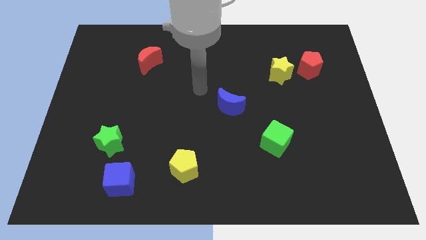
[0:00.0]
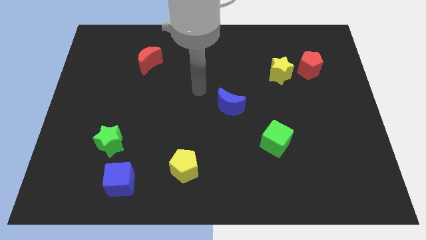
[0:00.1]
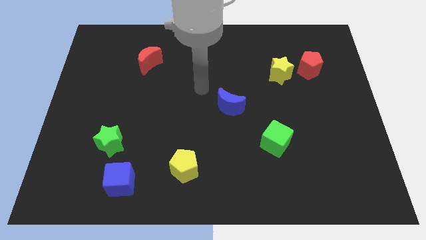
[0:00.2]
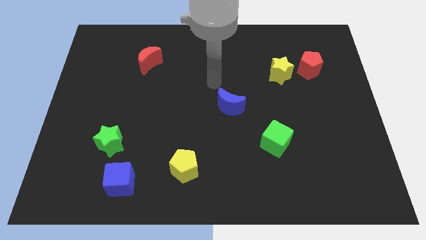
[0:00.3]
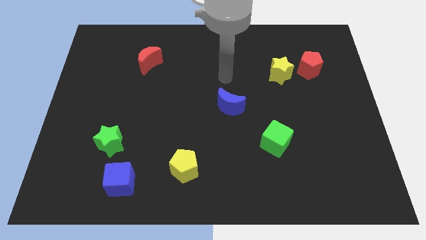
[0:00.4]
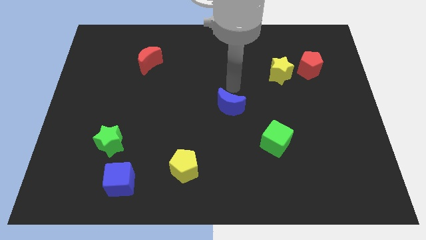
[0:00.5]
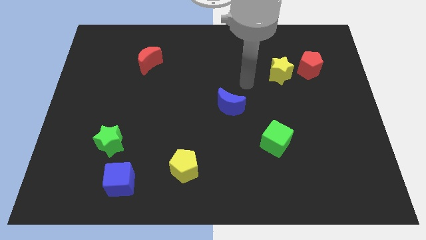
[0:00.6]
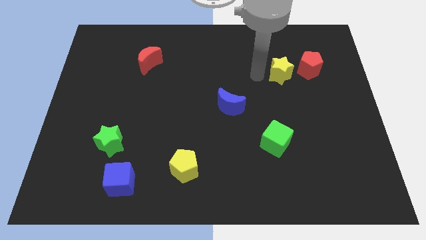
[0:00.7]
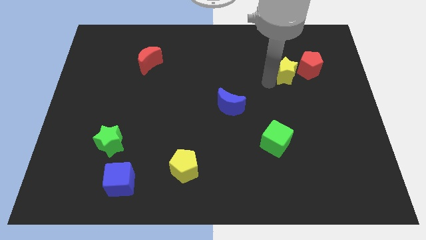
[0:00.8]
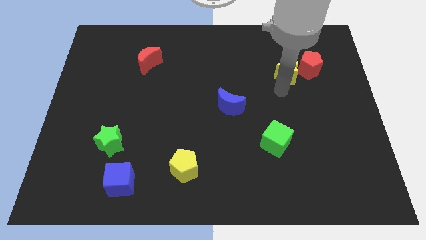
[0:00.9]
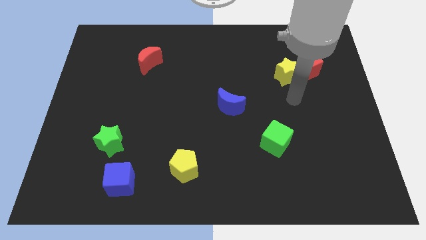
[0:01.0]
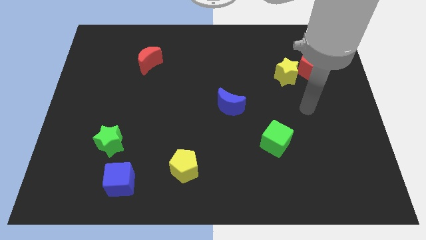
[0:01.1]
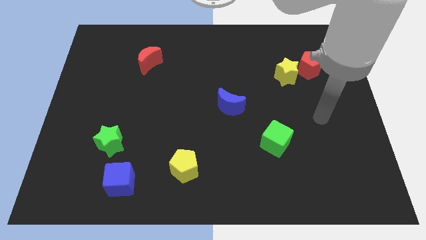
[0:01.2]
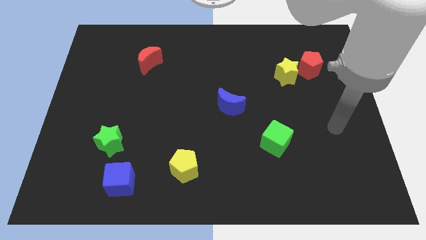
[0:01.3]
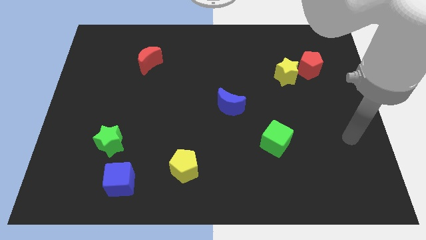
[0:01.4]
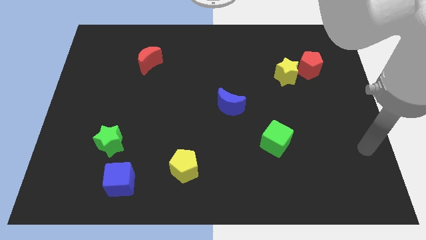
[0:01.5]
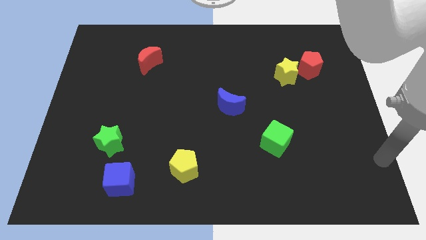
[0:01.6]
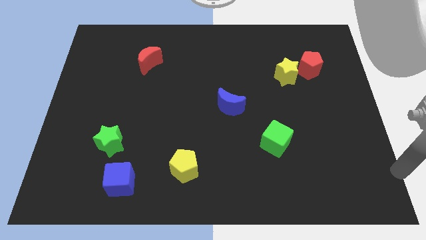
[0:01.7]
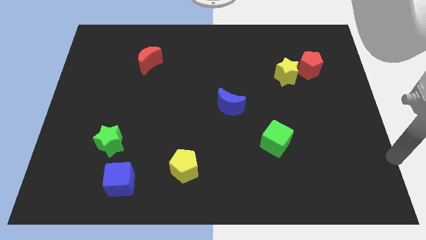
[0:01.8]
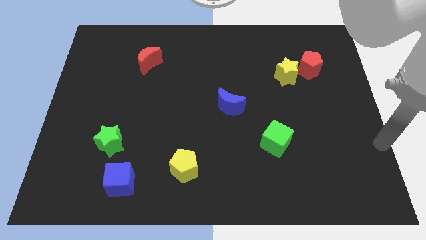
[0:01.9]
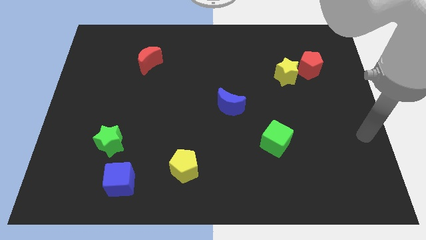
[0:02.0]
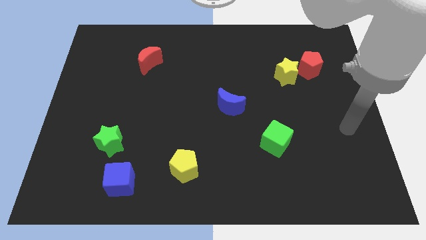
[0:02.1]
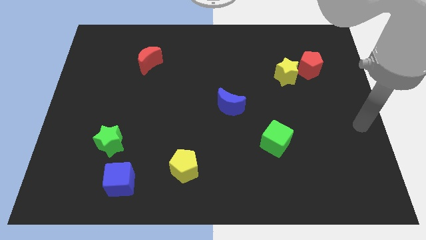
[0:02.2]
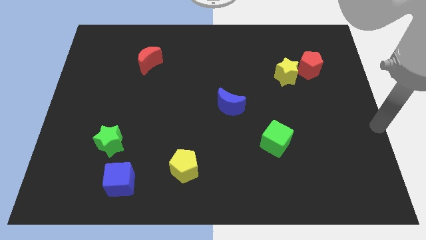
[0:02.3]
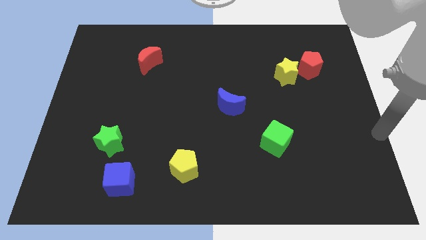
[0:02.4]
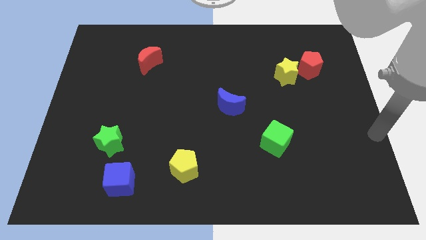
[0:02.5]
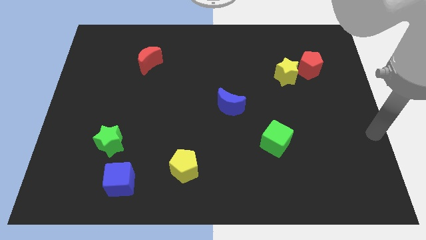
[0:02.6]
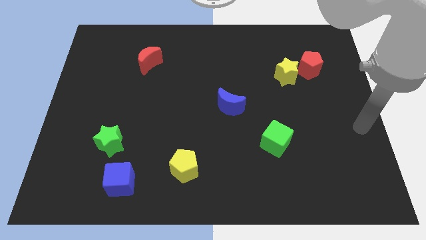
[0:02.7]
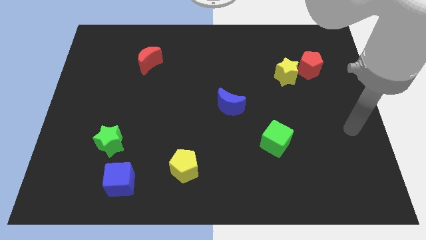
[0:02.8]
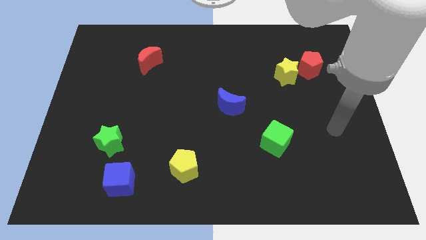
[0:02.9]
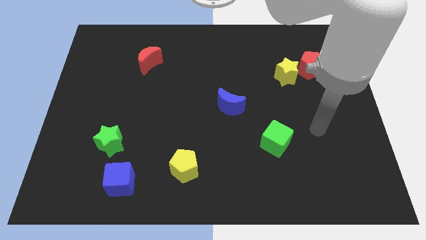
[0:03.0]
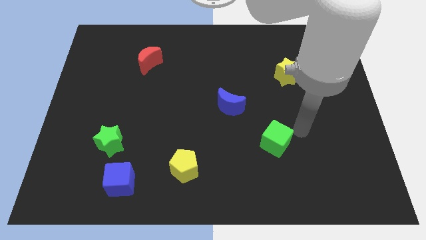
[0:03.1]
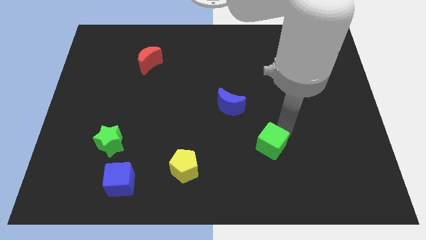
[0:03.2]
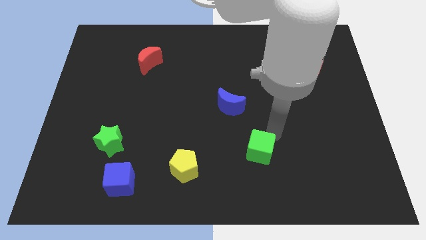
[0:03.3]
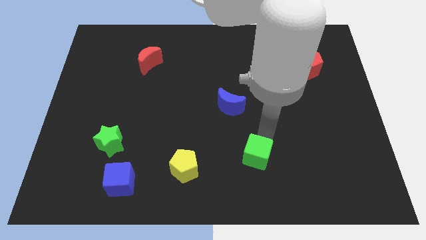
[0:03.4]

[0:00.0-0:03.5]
push the green cube slightly to the bottom side of the board

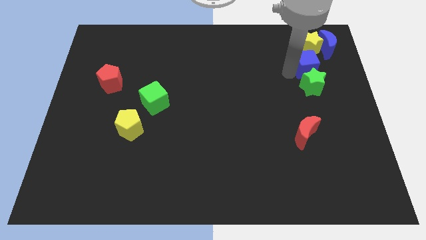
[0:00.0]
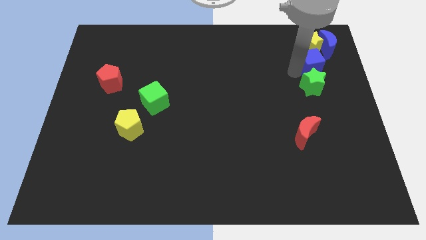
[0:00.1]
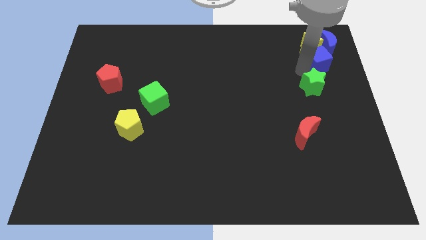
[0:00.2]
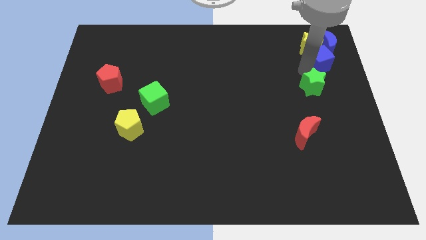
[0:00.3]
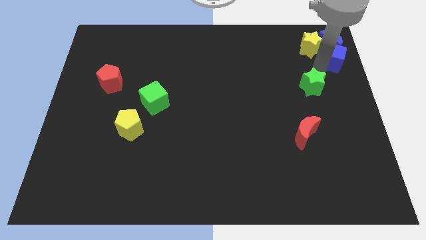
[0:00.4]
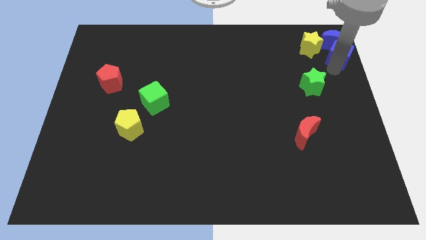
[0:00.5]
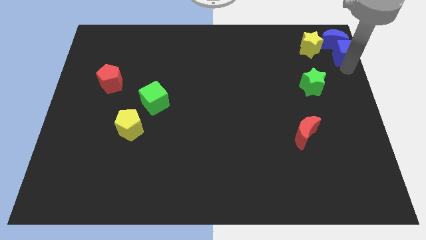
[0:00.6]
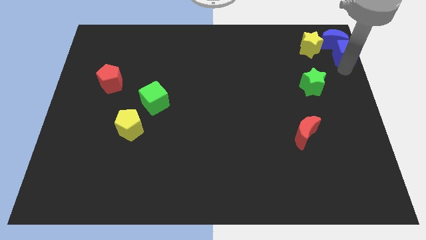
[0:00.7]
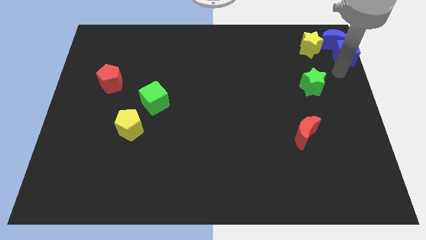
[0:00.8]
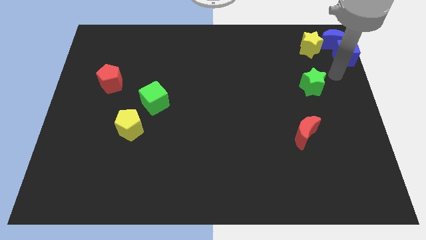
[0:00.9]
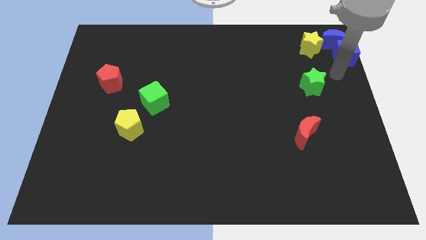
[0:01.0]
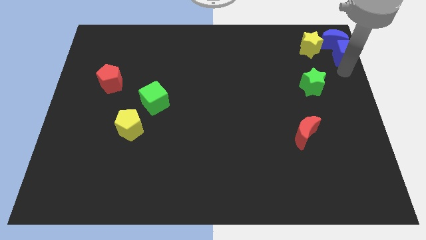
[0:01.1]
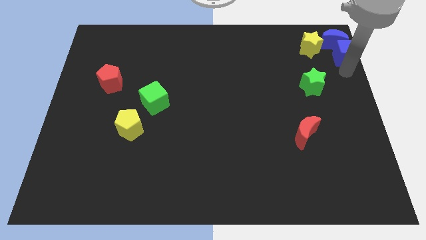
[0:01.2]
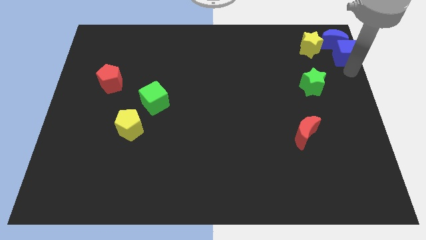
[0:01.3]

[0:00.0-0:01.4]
place blue cube below blue crescent

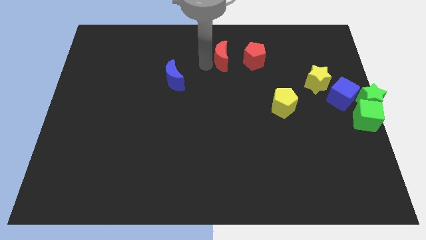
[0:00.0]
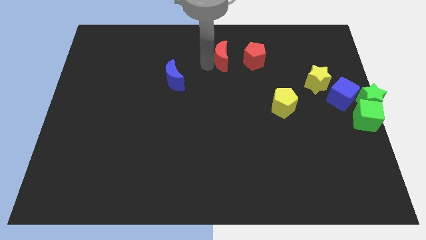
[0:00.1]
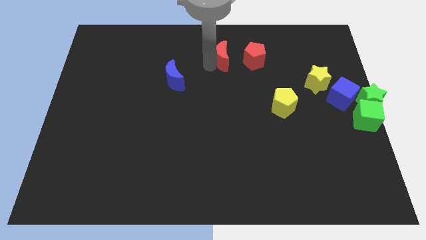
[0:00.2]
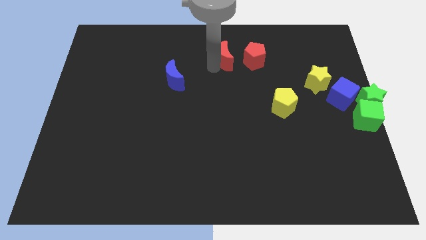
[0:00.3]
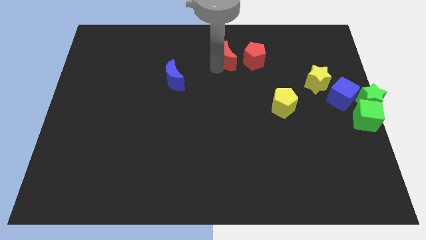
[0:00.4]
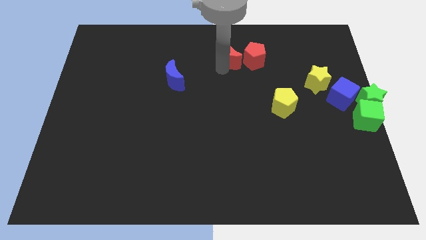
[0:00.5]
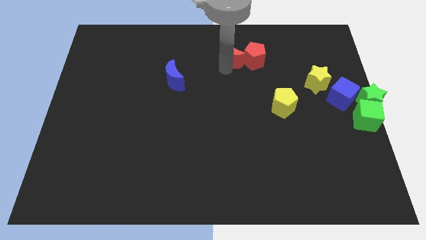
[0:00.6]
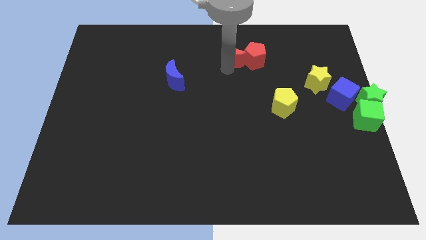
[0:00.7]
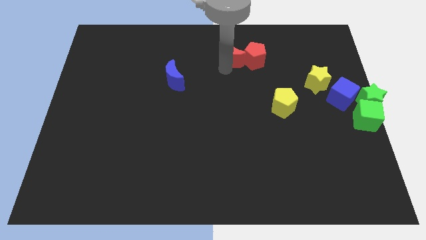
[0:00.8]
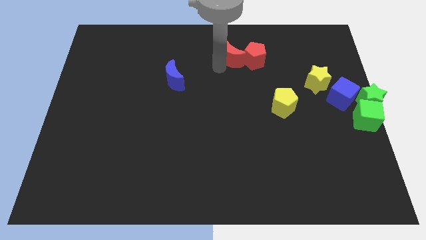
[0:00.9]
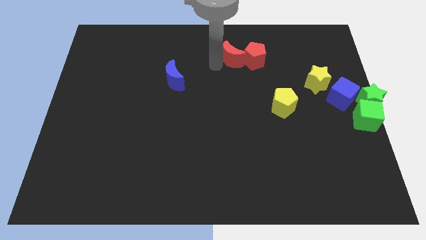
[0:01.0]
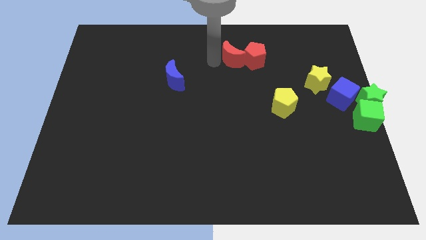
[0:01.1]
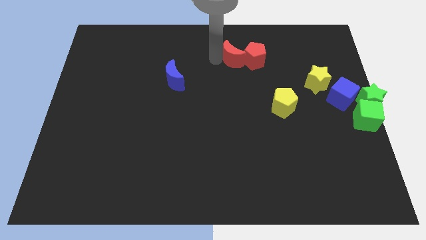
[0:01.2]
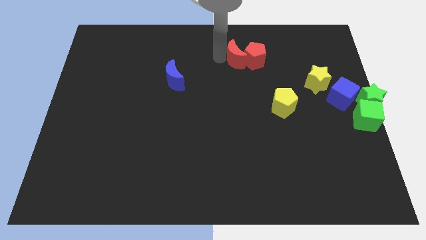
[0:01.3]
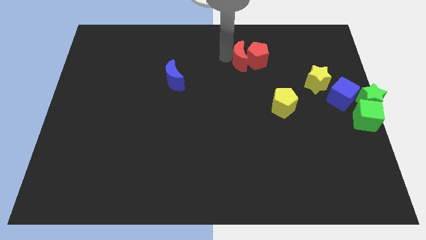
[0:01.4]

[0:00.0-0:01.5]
push the red crescent into the red pentagon

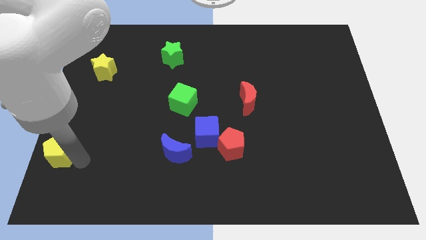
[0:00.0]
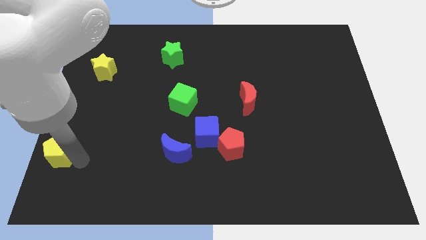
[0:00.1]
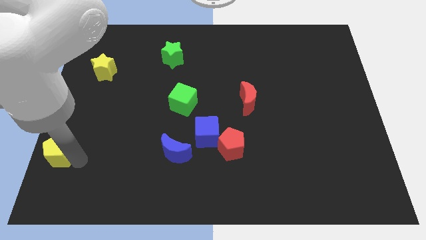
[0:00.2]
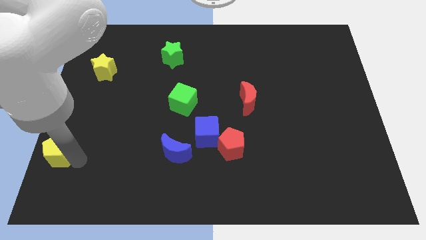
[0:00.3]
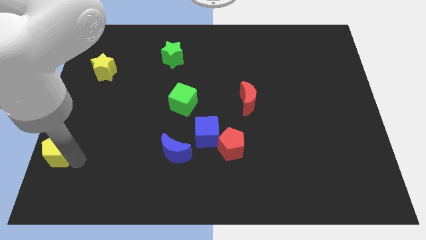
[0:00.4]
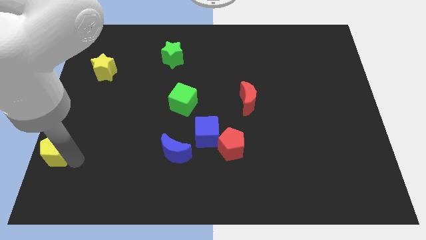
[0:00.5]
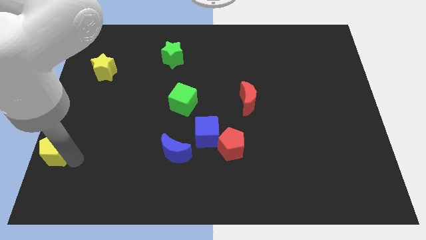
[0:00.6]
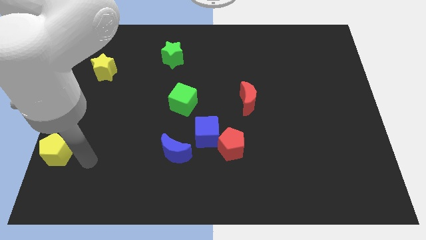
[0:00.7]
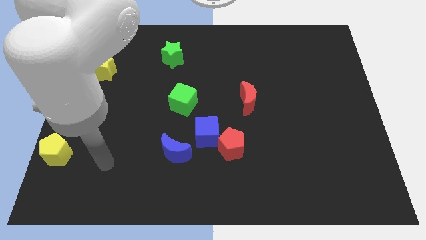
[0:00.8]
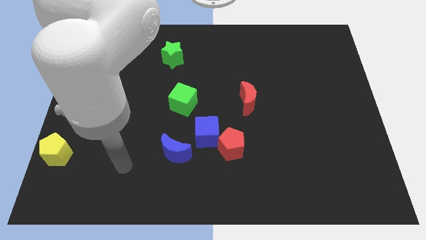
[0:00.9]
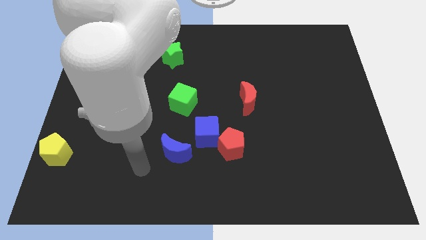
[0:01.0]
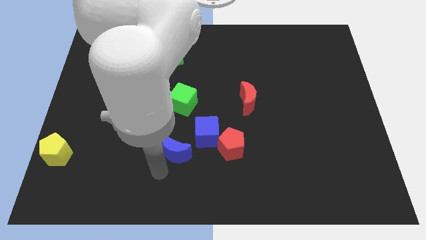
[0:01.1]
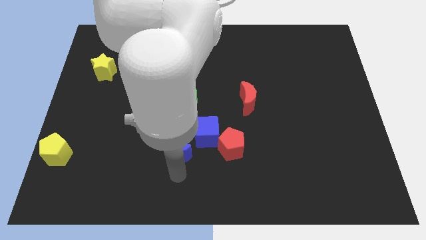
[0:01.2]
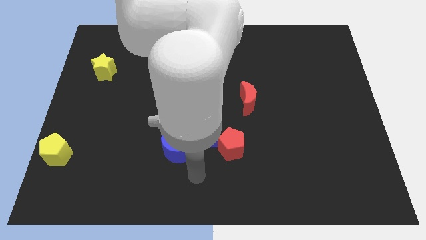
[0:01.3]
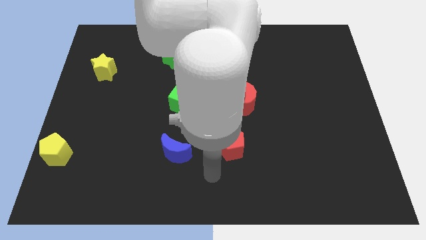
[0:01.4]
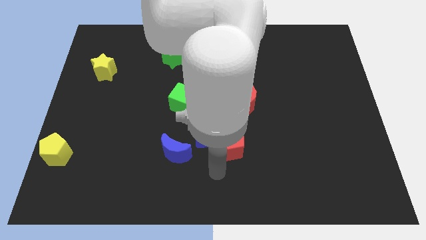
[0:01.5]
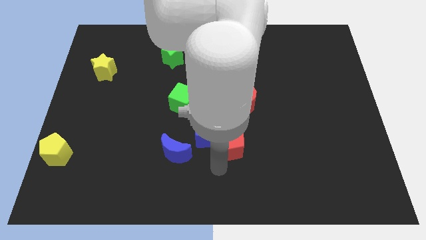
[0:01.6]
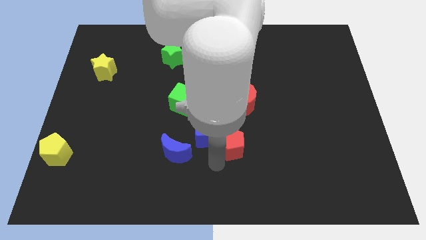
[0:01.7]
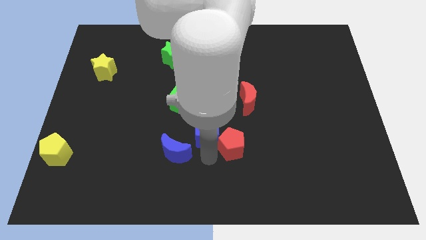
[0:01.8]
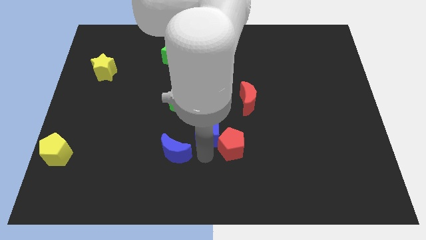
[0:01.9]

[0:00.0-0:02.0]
place your arm in between the blue moon and red pentagon

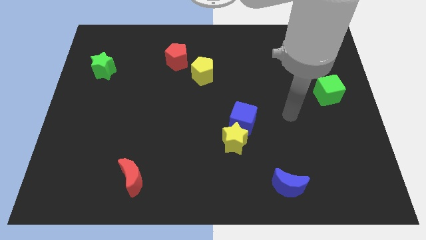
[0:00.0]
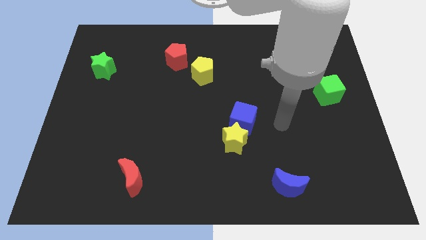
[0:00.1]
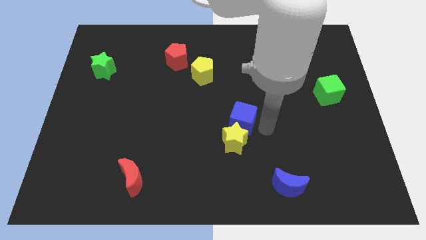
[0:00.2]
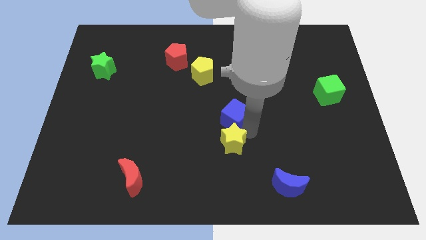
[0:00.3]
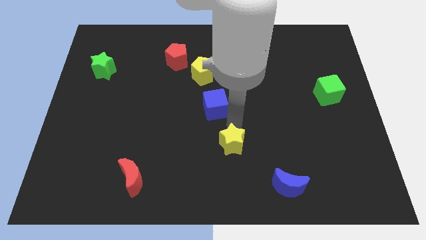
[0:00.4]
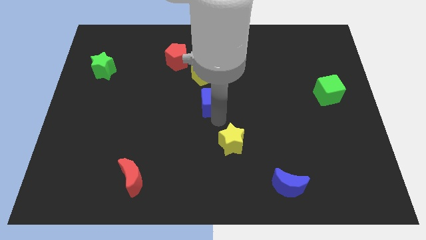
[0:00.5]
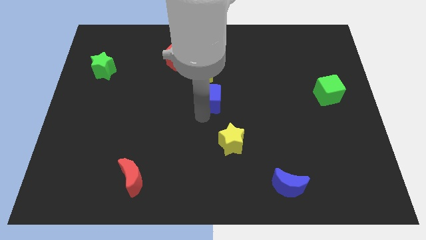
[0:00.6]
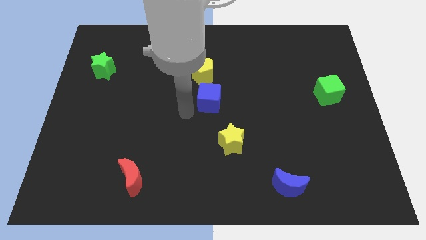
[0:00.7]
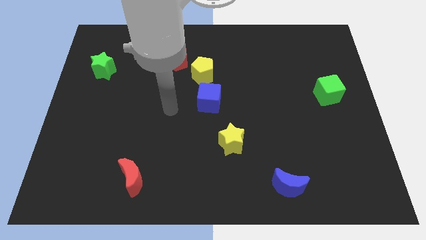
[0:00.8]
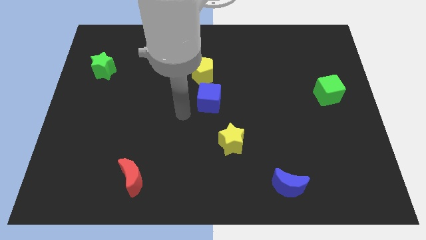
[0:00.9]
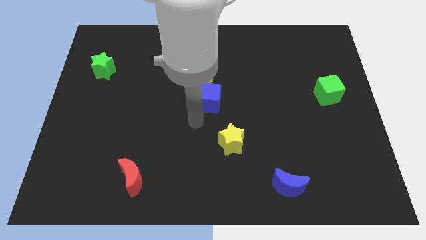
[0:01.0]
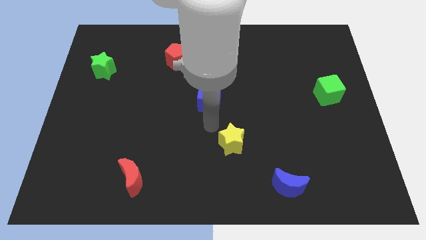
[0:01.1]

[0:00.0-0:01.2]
place blue cube to the bottom right of the yellow pentagon
